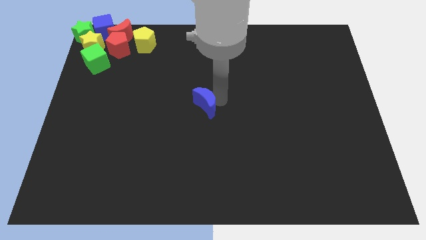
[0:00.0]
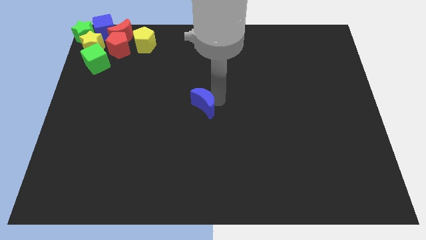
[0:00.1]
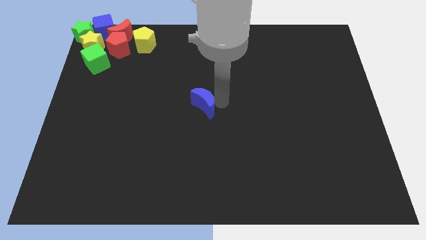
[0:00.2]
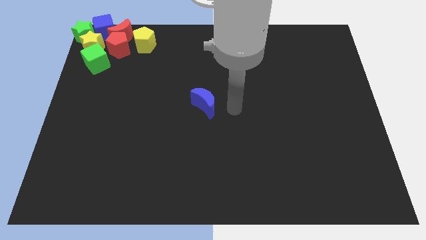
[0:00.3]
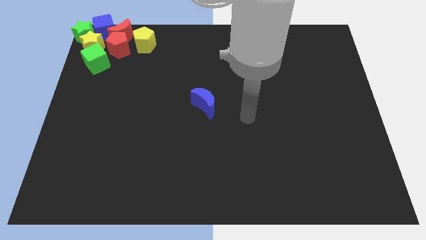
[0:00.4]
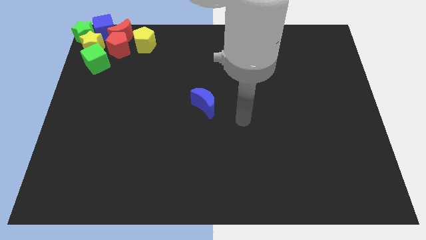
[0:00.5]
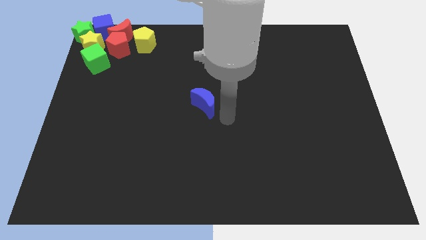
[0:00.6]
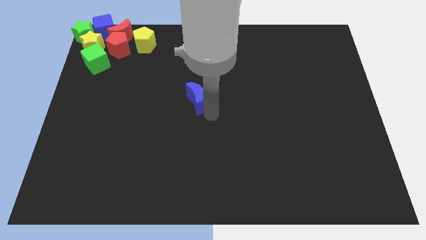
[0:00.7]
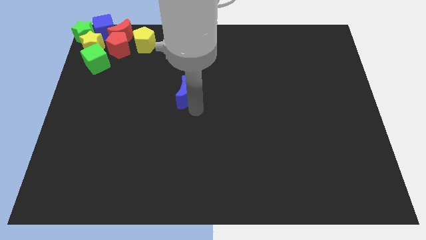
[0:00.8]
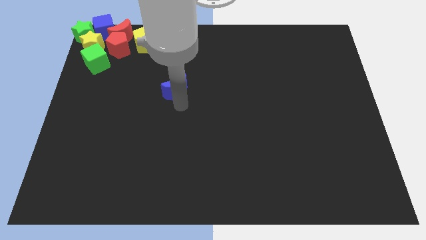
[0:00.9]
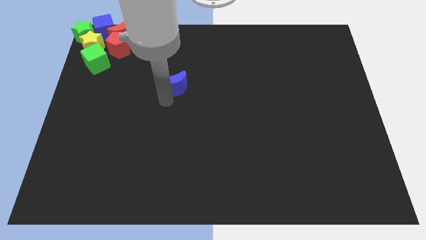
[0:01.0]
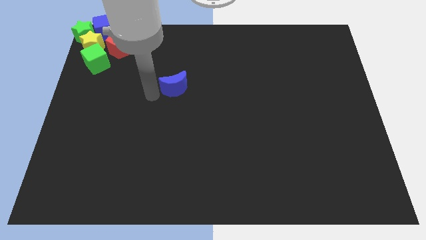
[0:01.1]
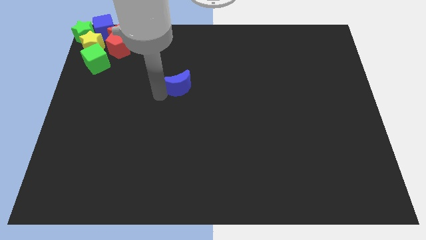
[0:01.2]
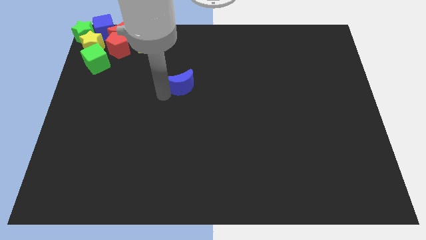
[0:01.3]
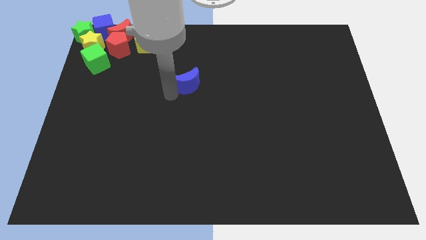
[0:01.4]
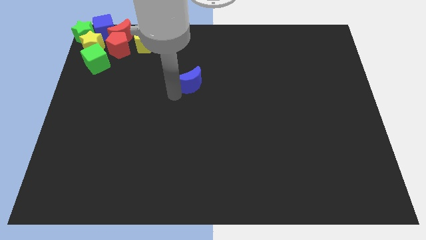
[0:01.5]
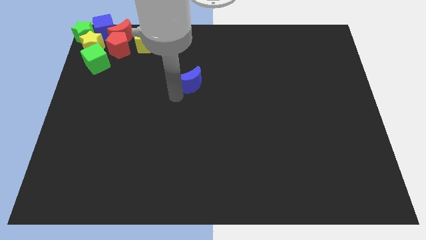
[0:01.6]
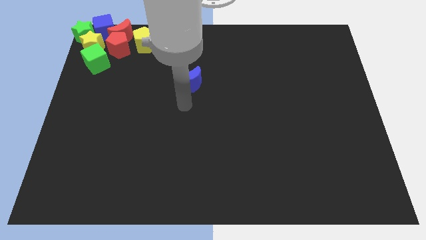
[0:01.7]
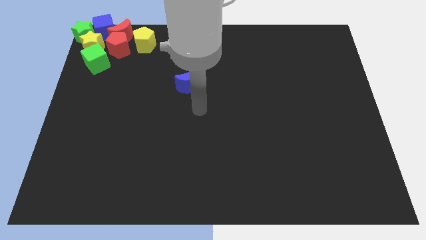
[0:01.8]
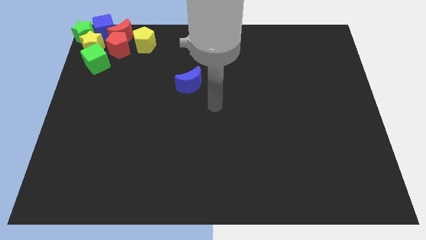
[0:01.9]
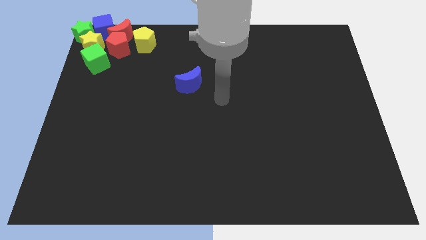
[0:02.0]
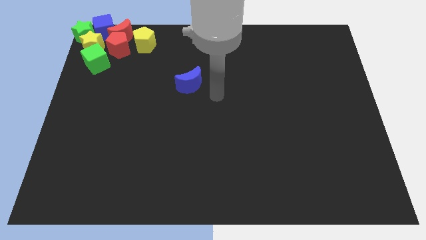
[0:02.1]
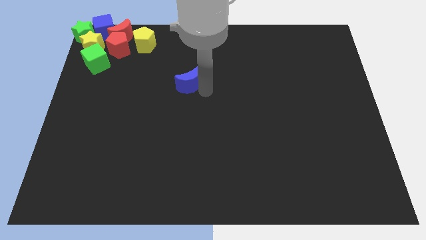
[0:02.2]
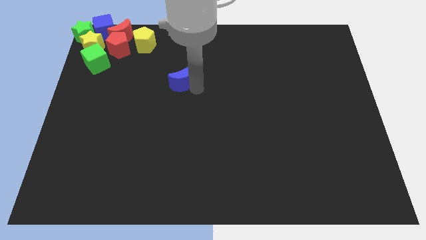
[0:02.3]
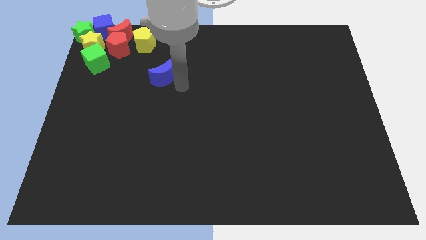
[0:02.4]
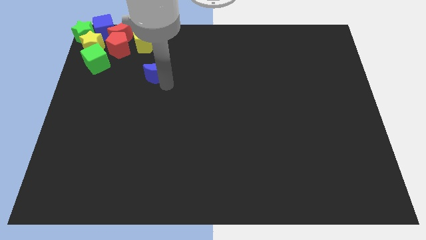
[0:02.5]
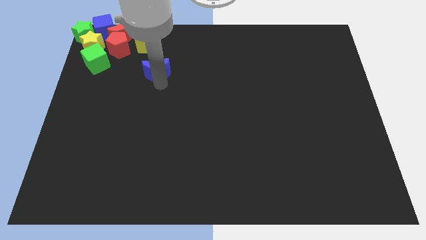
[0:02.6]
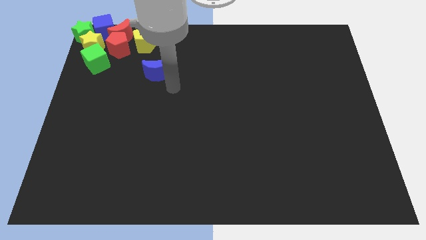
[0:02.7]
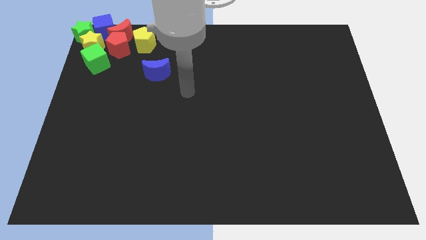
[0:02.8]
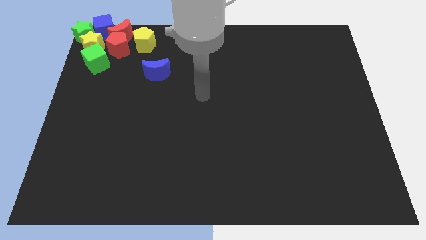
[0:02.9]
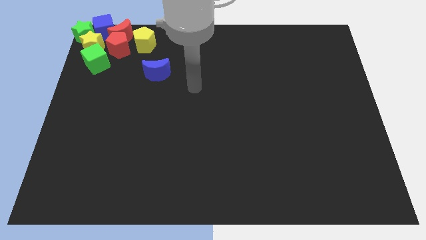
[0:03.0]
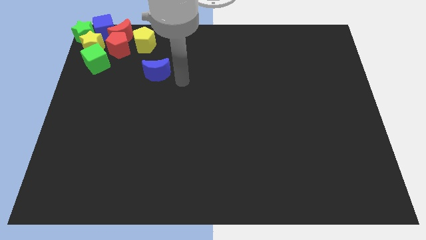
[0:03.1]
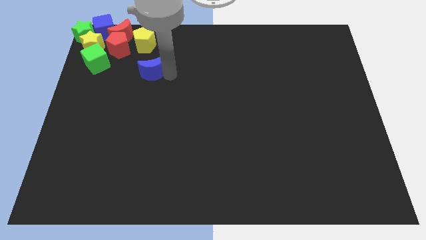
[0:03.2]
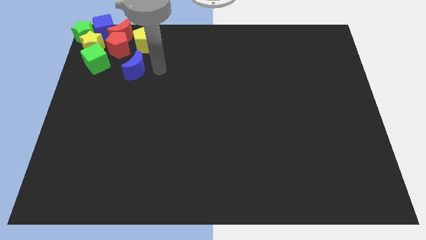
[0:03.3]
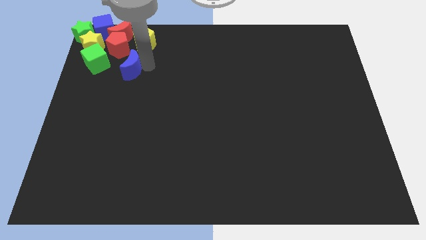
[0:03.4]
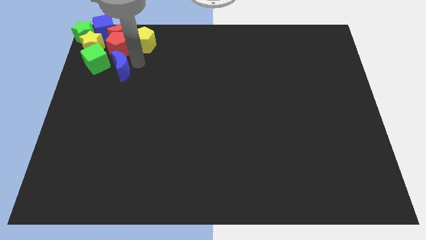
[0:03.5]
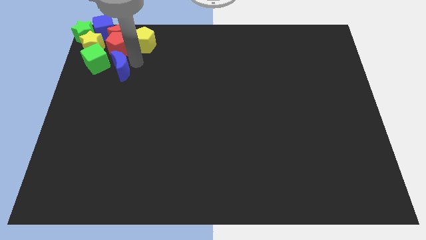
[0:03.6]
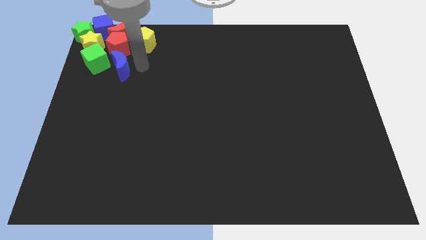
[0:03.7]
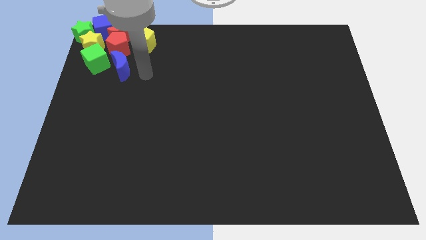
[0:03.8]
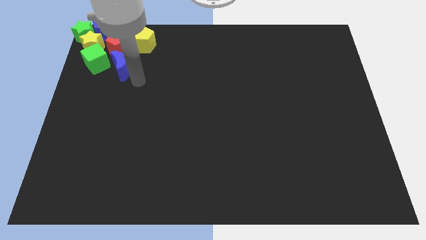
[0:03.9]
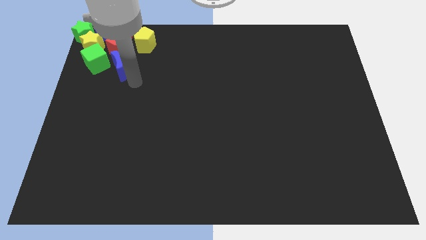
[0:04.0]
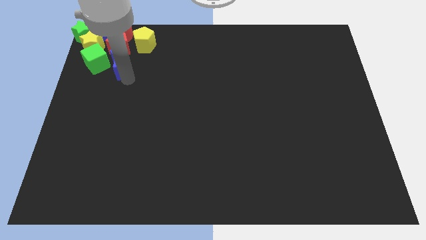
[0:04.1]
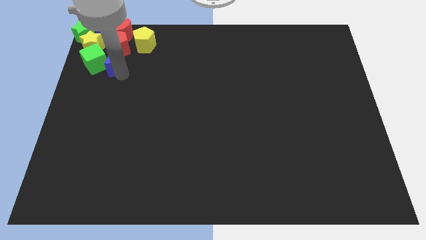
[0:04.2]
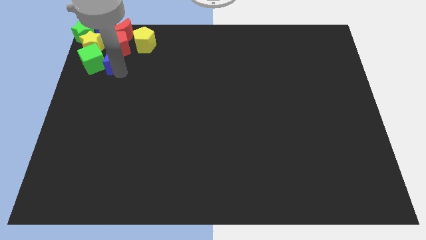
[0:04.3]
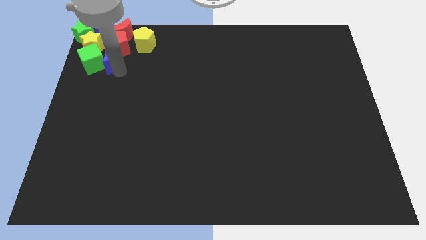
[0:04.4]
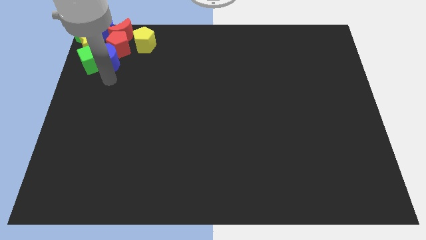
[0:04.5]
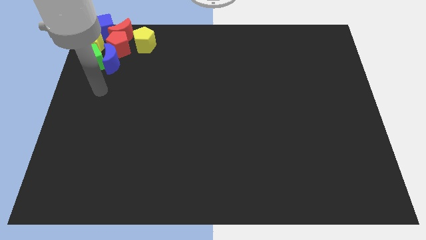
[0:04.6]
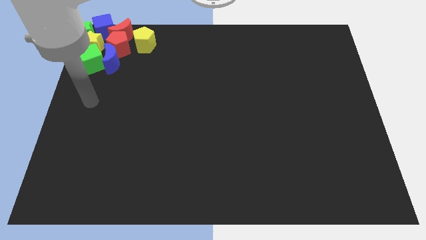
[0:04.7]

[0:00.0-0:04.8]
push the blue moon towards the group of blocks

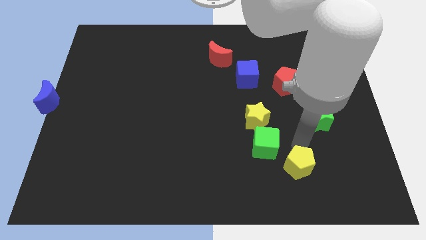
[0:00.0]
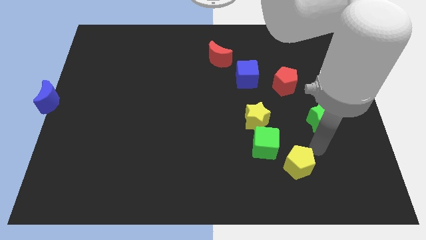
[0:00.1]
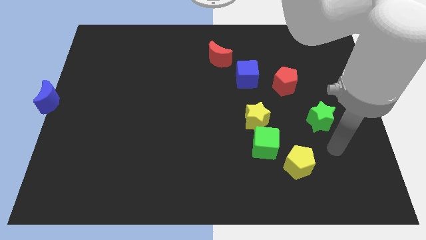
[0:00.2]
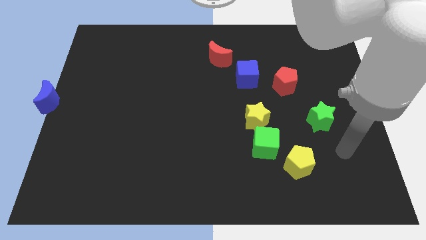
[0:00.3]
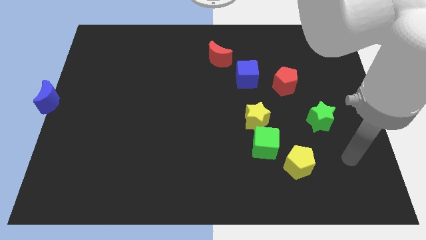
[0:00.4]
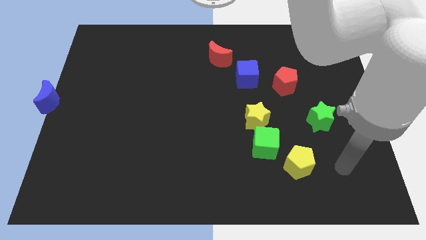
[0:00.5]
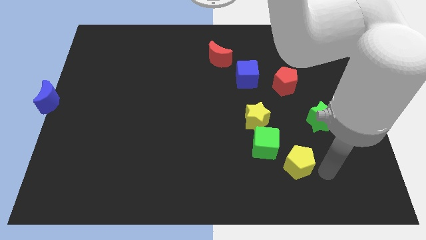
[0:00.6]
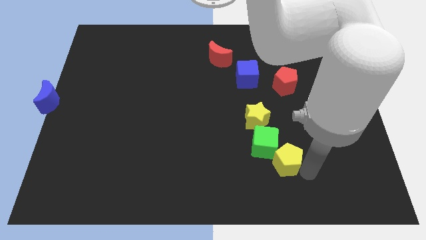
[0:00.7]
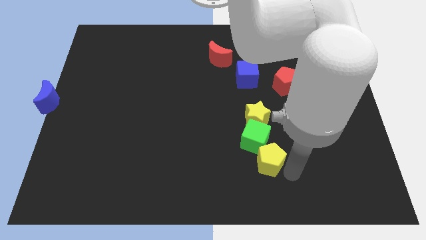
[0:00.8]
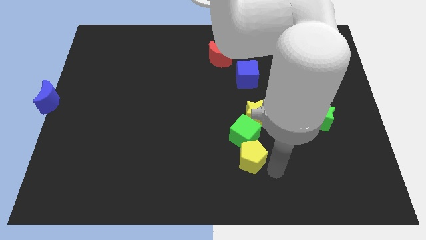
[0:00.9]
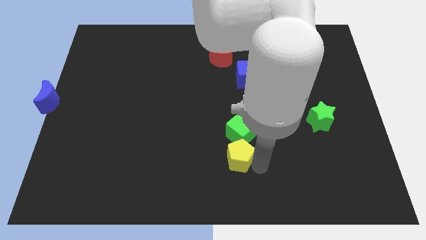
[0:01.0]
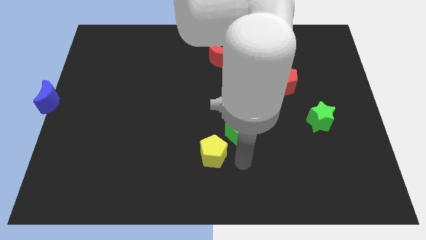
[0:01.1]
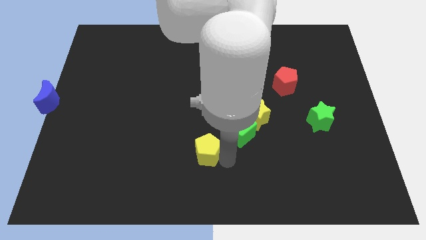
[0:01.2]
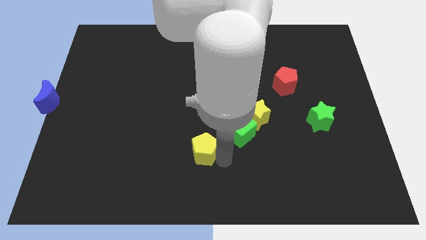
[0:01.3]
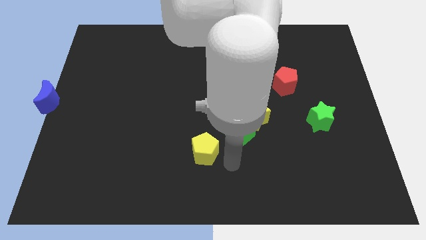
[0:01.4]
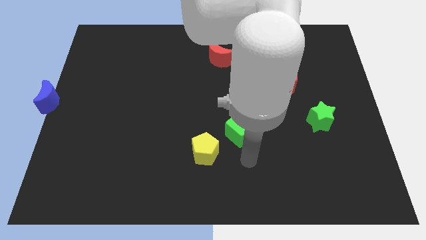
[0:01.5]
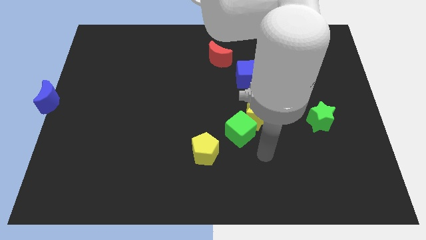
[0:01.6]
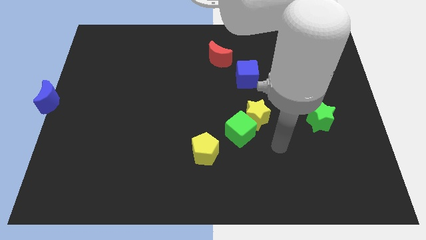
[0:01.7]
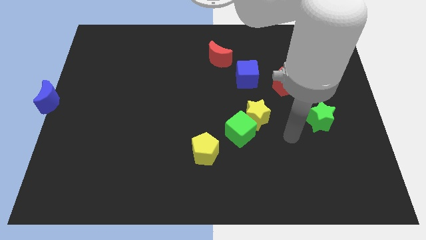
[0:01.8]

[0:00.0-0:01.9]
move yellow pentagon to the bottom left

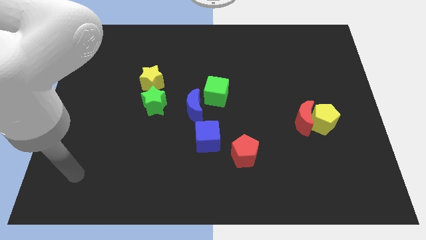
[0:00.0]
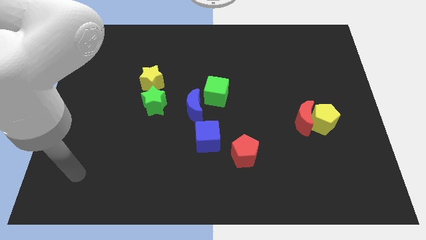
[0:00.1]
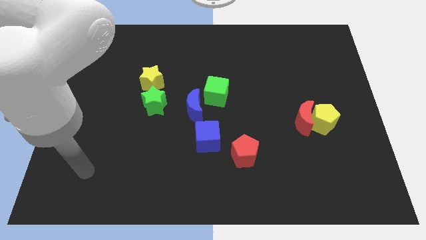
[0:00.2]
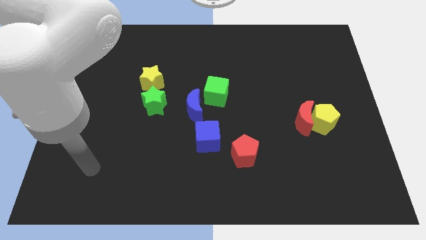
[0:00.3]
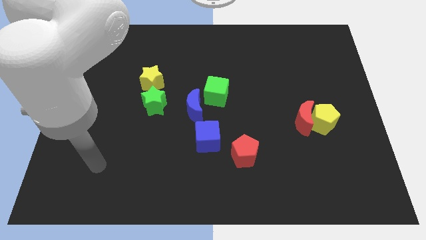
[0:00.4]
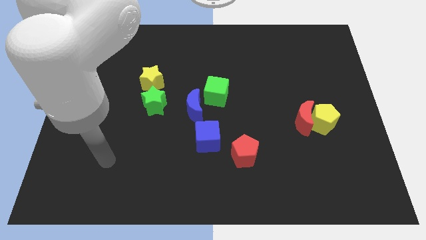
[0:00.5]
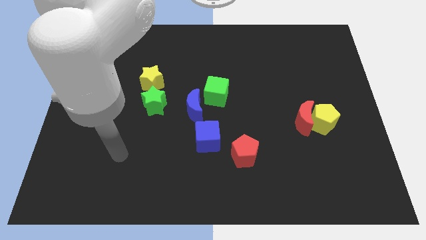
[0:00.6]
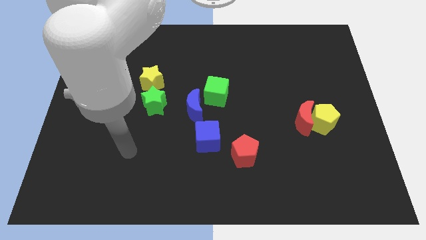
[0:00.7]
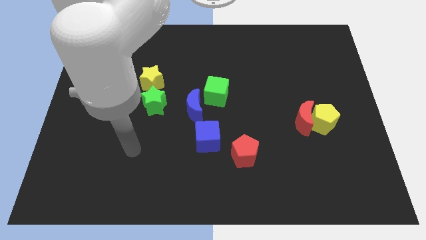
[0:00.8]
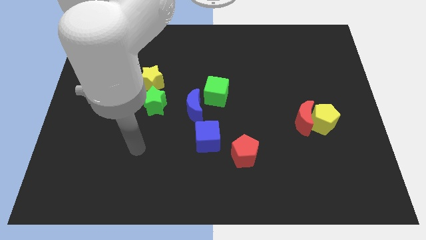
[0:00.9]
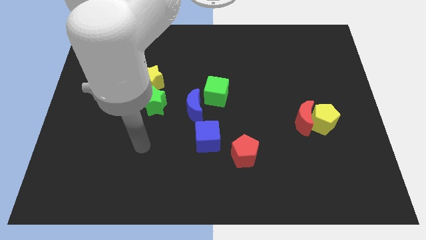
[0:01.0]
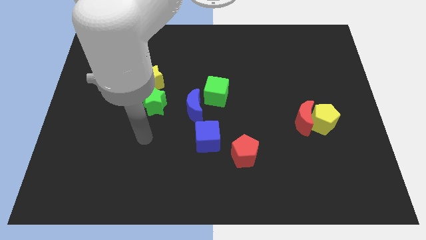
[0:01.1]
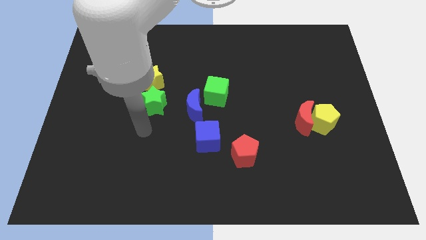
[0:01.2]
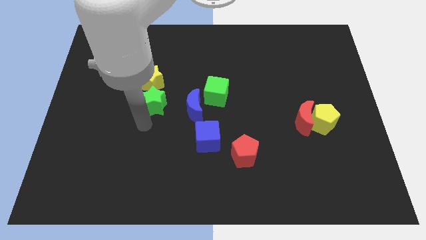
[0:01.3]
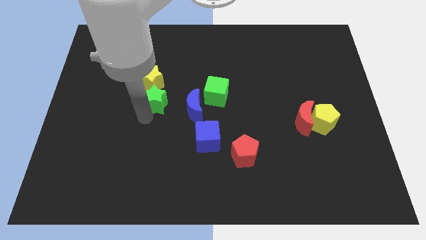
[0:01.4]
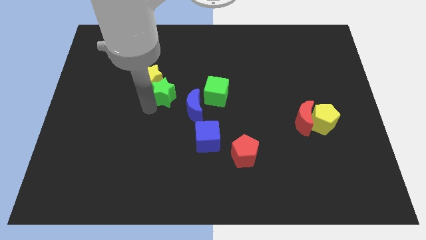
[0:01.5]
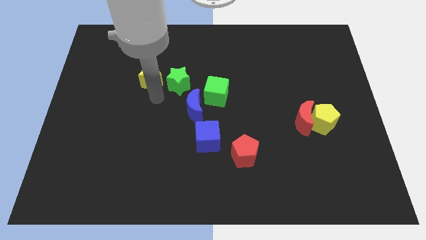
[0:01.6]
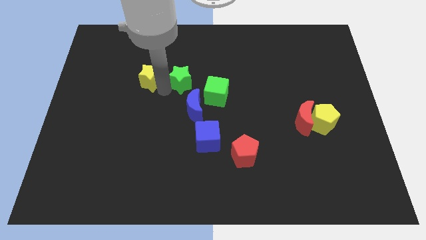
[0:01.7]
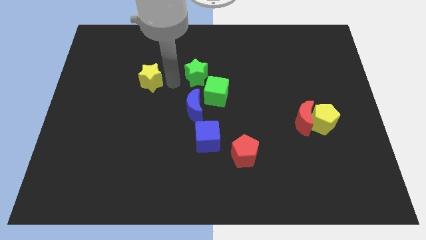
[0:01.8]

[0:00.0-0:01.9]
push the green star on top of blue moon

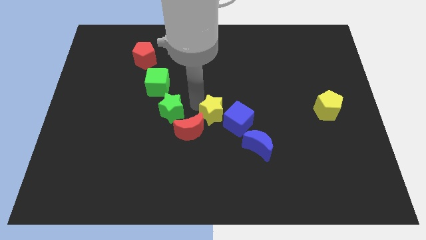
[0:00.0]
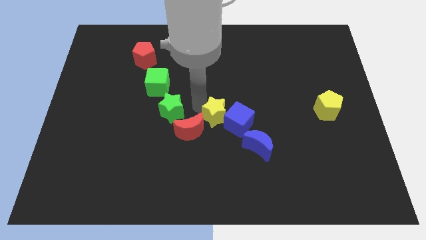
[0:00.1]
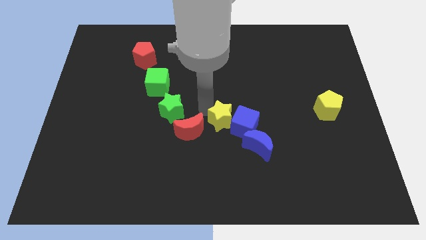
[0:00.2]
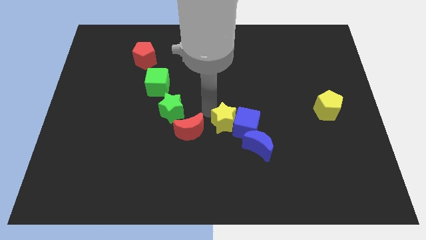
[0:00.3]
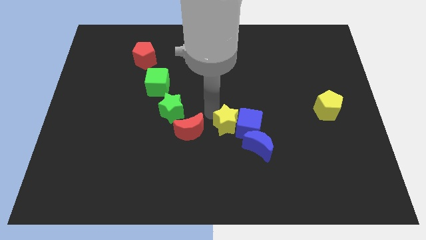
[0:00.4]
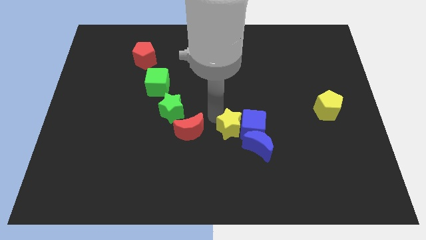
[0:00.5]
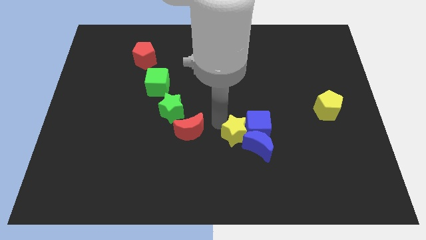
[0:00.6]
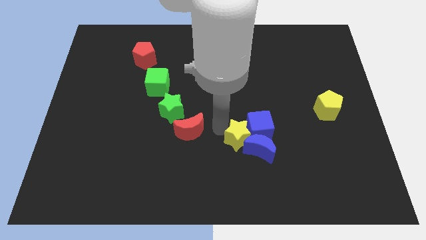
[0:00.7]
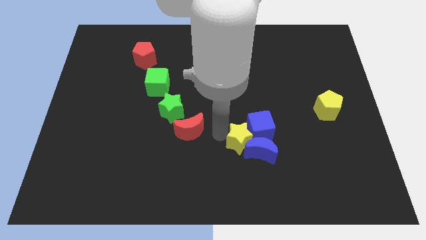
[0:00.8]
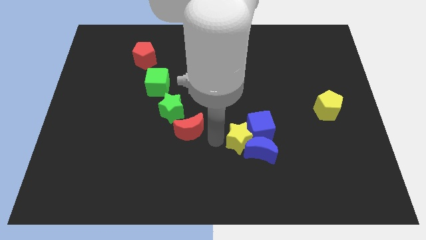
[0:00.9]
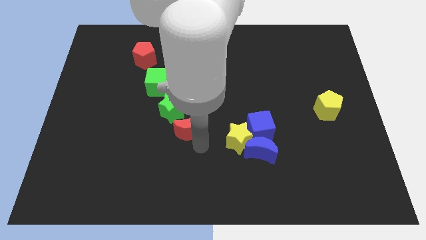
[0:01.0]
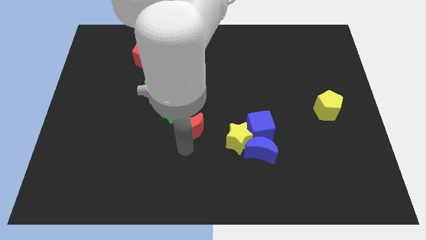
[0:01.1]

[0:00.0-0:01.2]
move the yellow star into the blue crescent and blue cube
